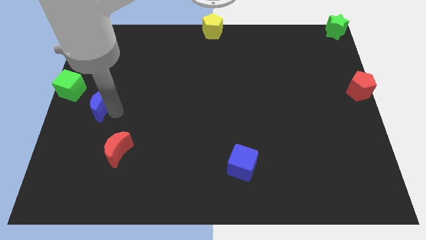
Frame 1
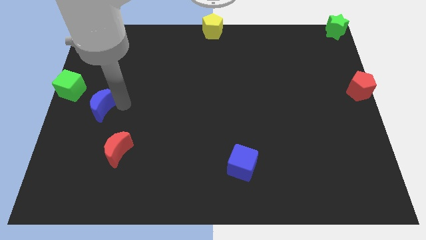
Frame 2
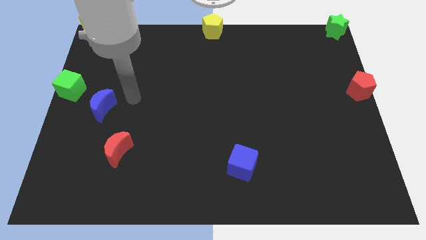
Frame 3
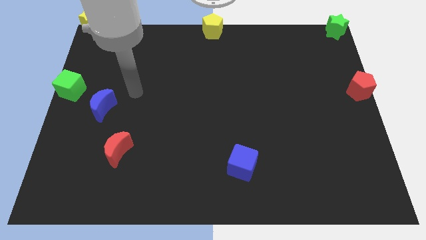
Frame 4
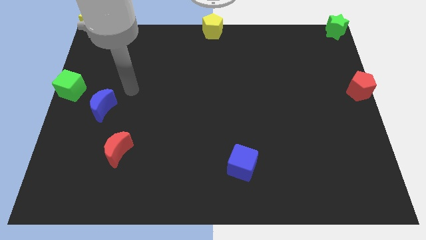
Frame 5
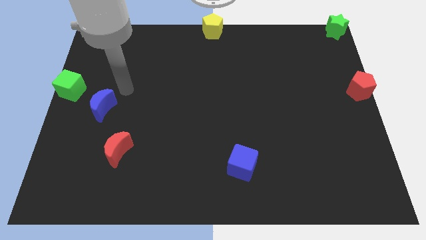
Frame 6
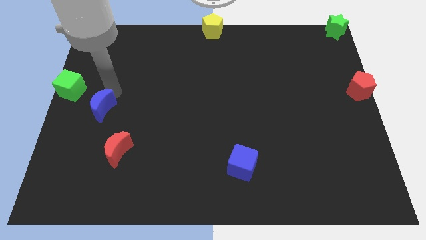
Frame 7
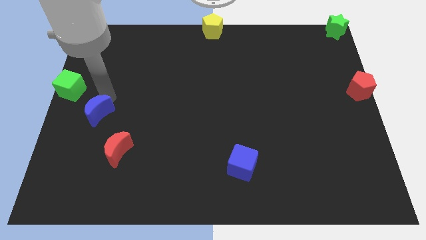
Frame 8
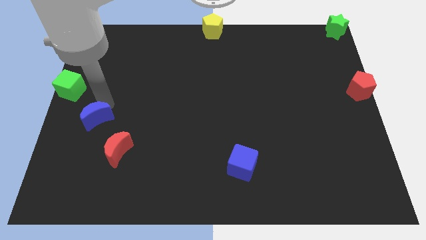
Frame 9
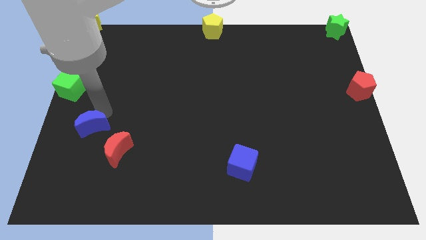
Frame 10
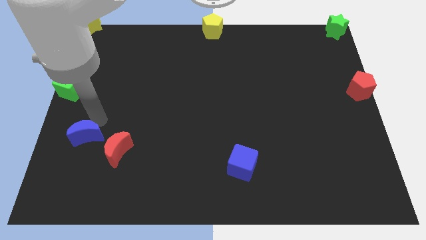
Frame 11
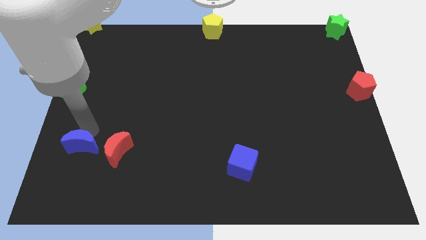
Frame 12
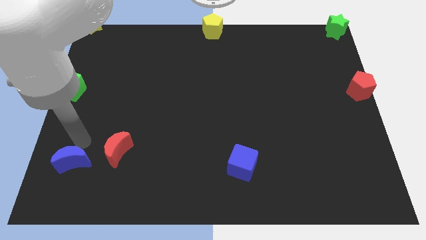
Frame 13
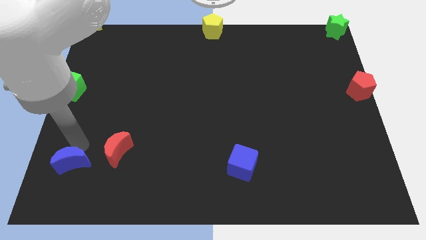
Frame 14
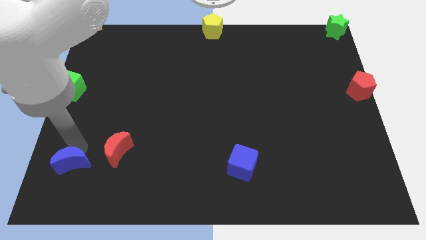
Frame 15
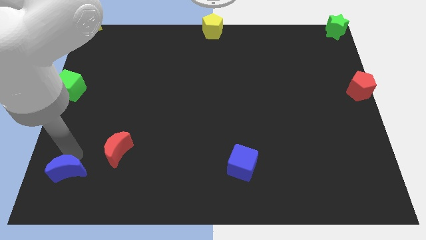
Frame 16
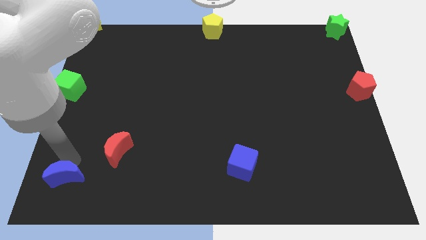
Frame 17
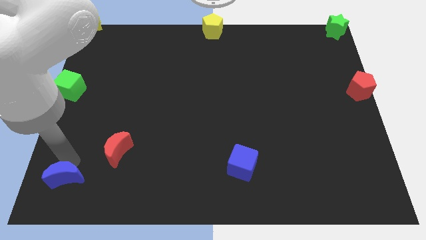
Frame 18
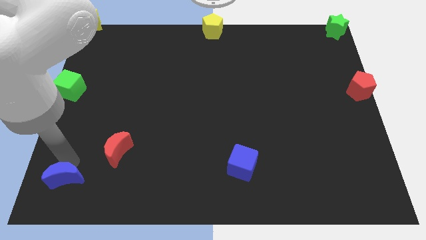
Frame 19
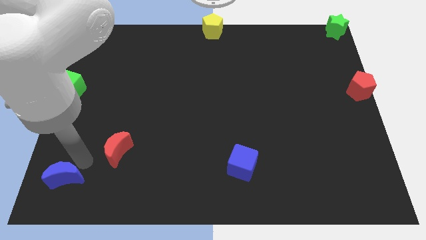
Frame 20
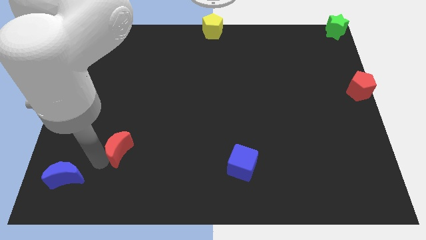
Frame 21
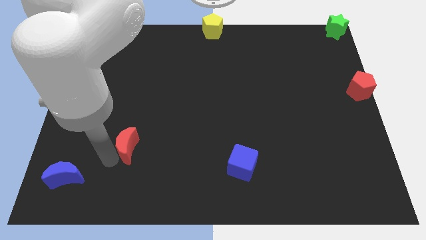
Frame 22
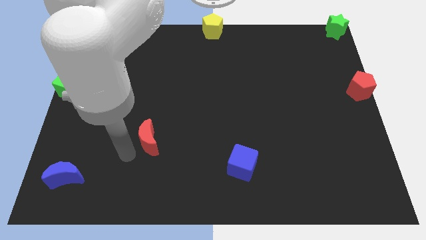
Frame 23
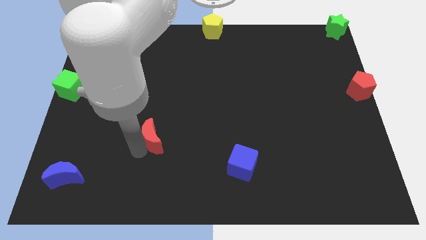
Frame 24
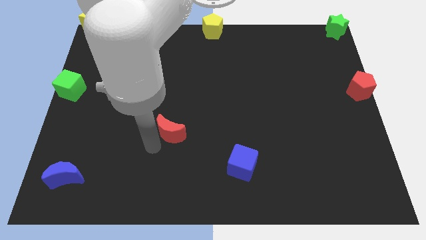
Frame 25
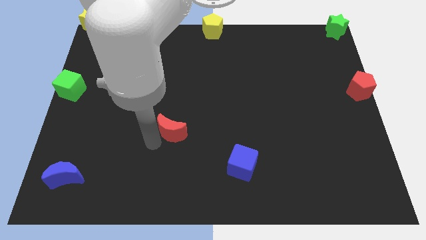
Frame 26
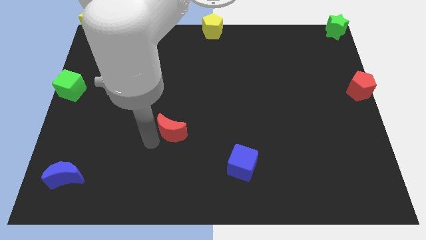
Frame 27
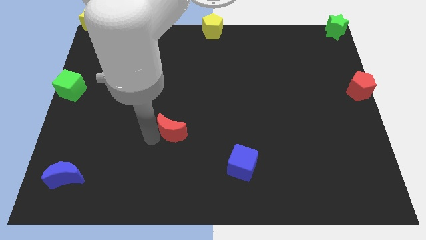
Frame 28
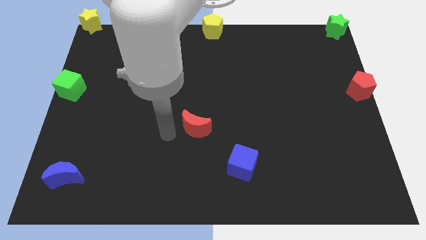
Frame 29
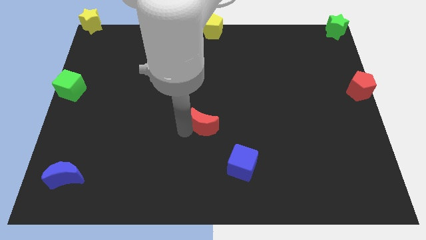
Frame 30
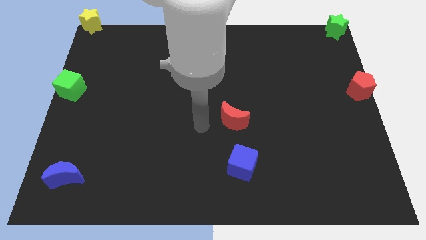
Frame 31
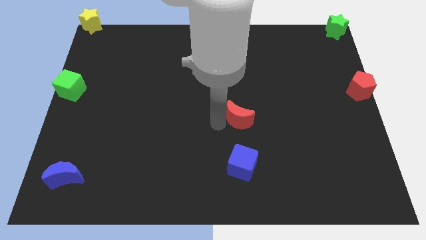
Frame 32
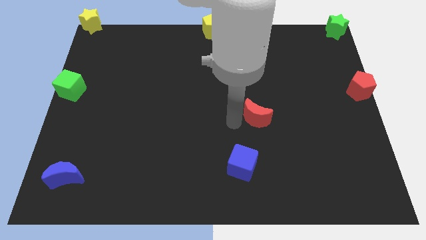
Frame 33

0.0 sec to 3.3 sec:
move the red moon to the middle of the board

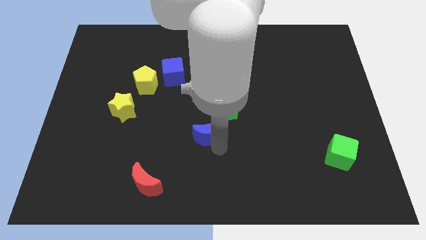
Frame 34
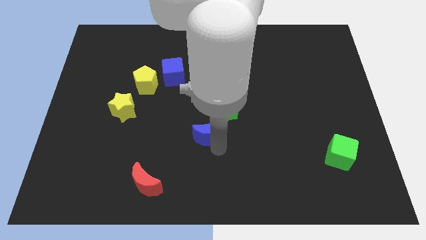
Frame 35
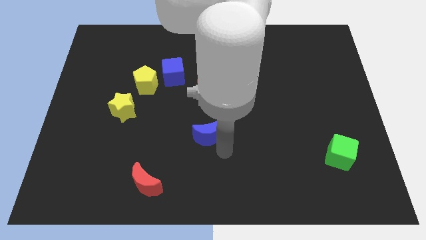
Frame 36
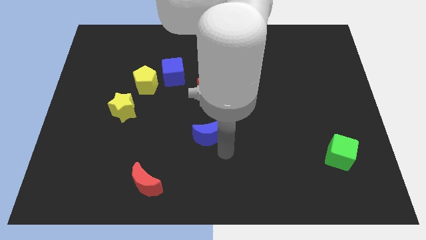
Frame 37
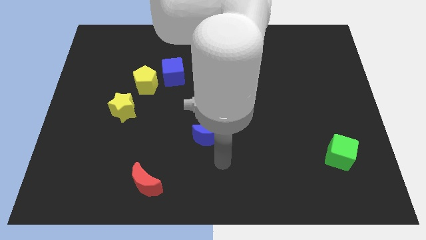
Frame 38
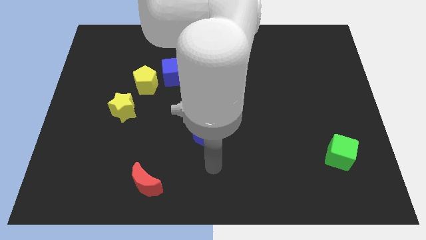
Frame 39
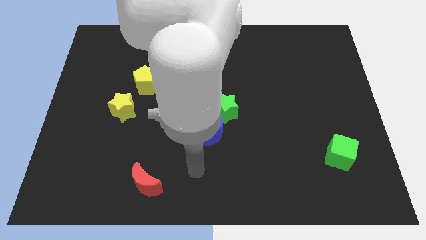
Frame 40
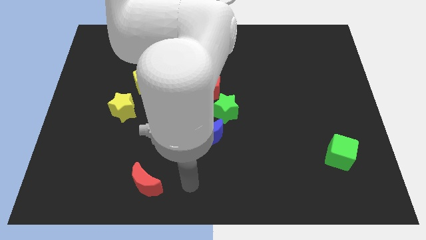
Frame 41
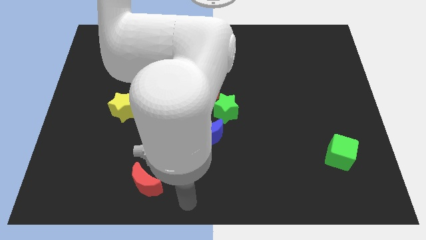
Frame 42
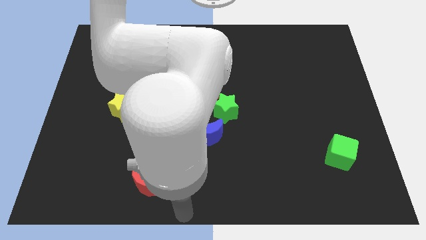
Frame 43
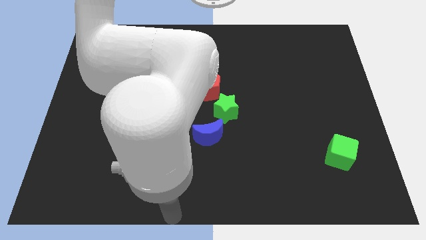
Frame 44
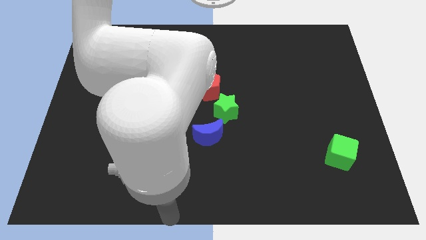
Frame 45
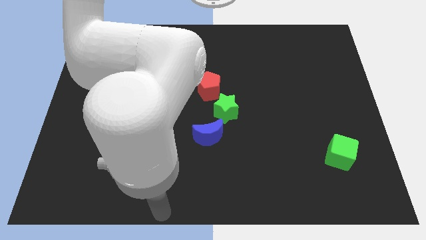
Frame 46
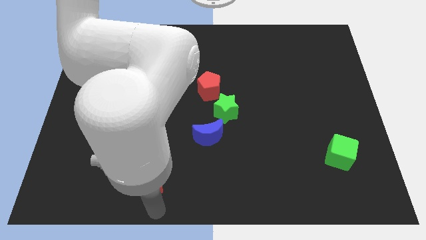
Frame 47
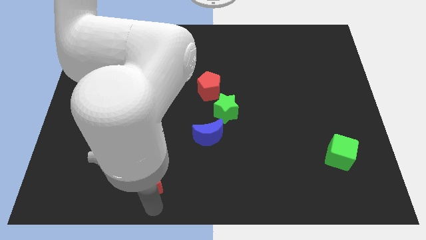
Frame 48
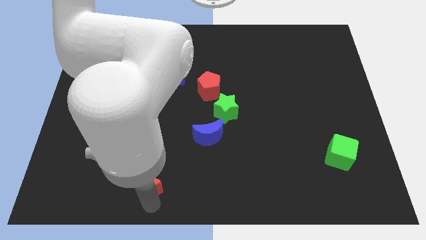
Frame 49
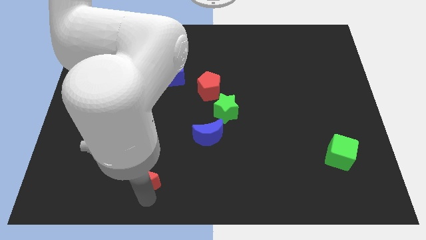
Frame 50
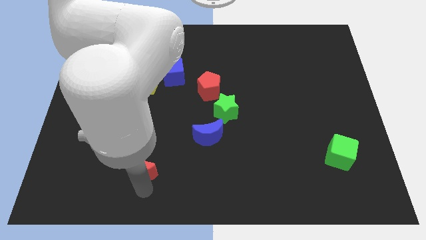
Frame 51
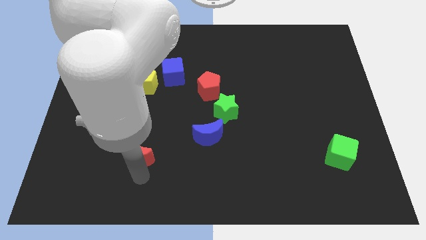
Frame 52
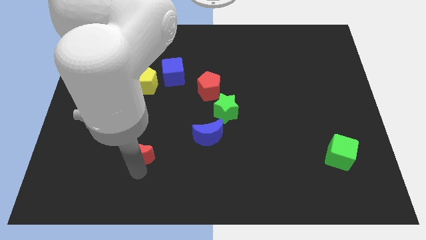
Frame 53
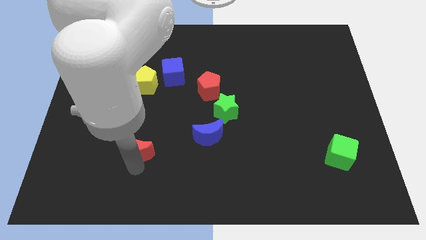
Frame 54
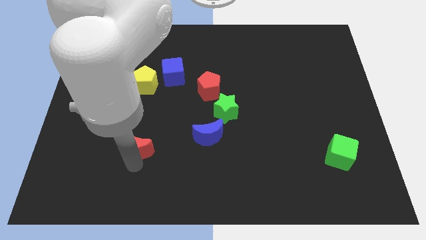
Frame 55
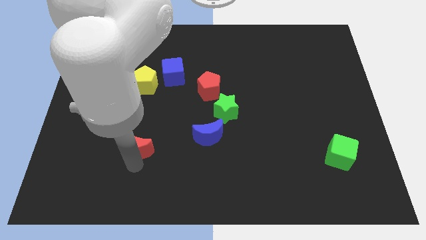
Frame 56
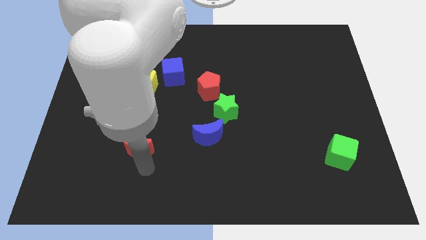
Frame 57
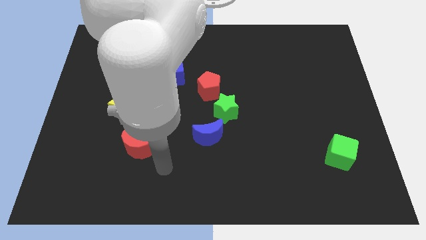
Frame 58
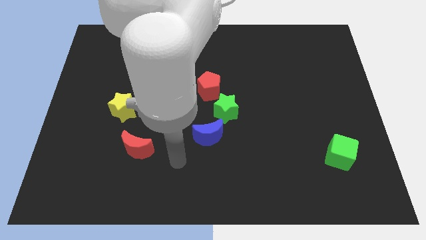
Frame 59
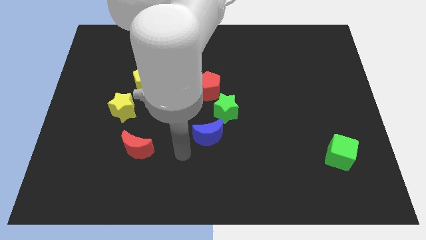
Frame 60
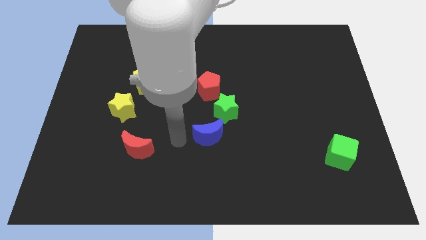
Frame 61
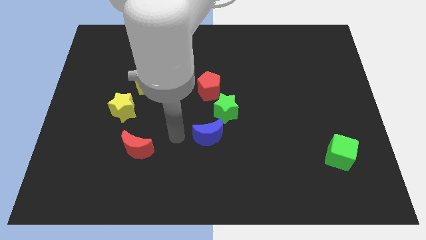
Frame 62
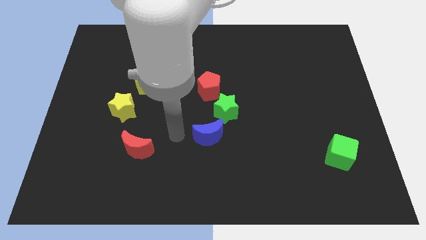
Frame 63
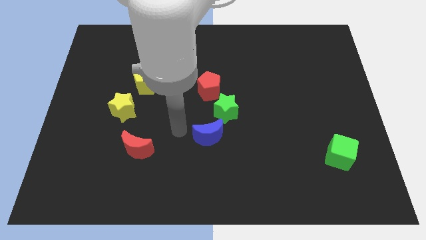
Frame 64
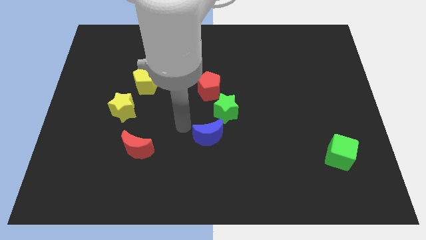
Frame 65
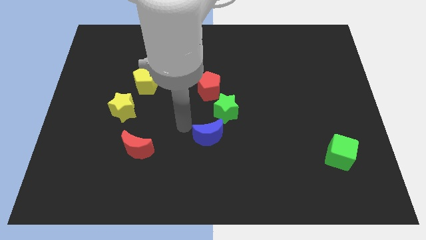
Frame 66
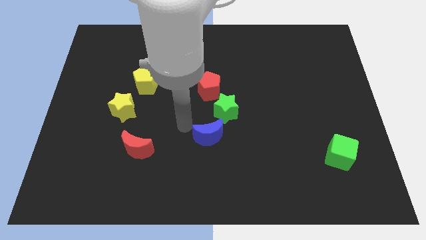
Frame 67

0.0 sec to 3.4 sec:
push the red crescent to the bottom of the yellow star

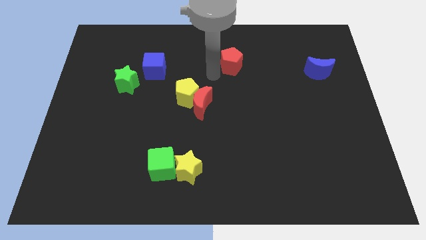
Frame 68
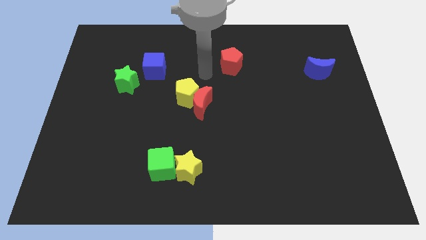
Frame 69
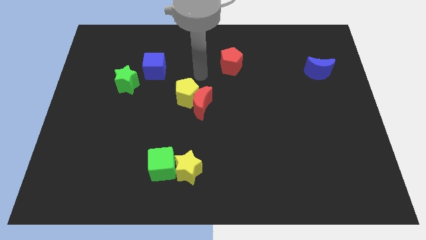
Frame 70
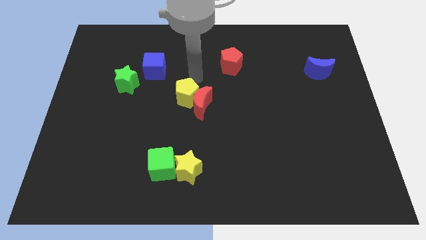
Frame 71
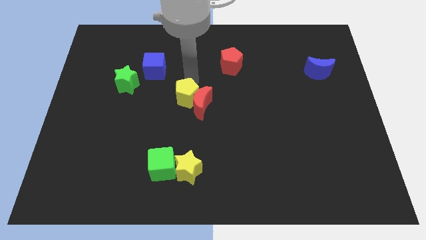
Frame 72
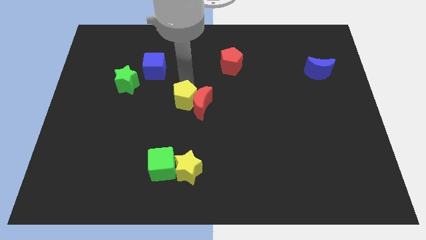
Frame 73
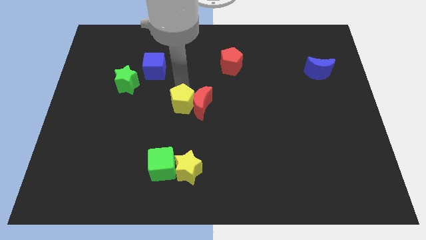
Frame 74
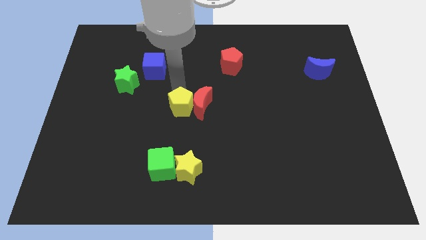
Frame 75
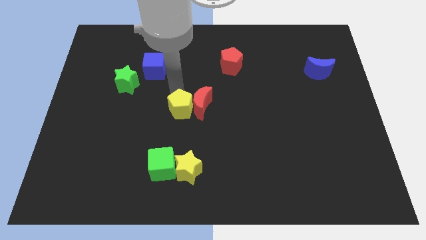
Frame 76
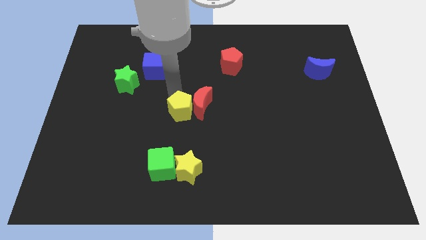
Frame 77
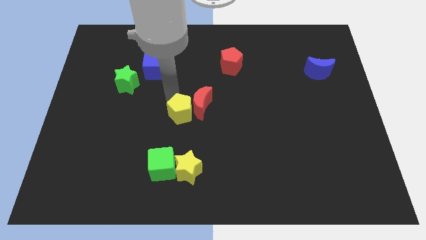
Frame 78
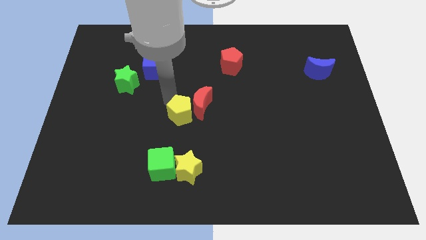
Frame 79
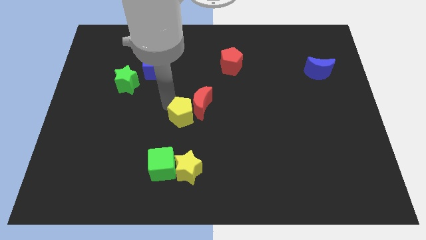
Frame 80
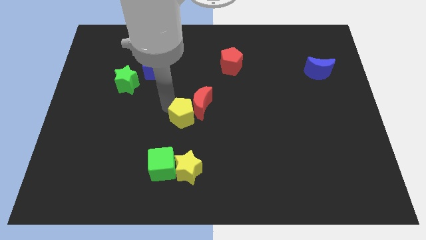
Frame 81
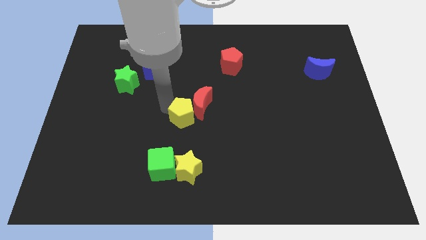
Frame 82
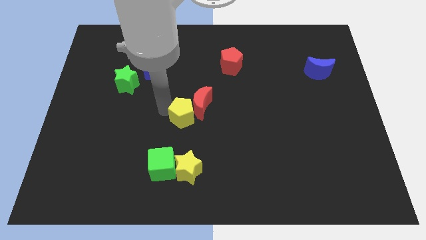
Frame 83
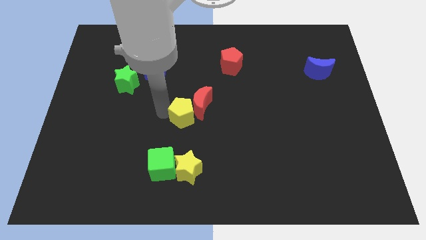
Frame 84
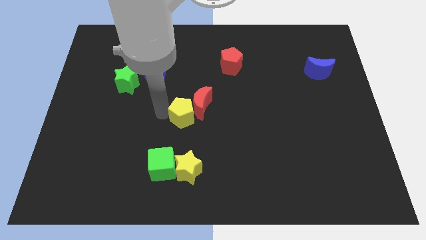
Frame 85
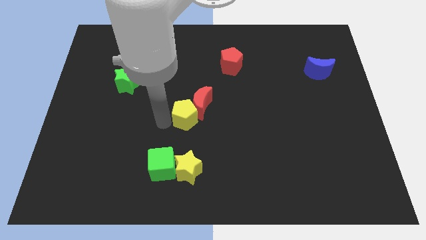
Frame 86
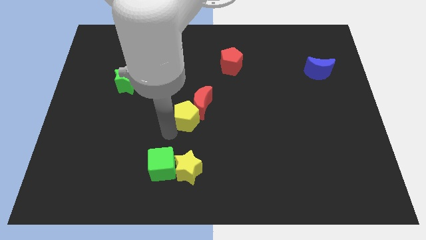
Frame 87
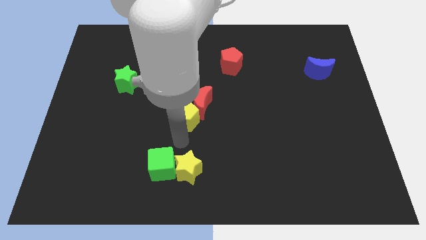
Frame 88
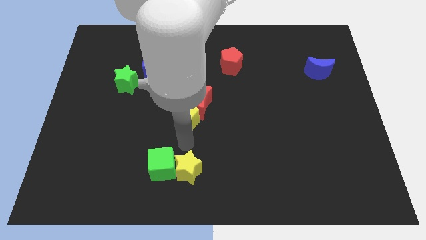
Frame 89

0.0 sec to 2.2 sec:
place the yellow pentagon to the bottom left of the red moon

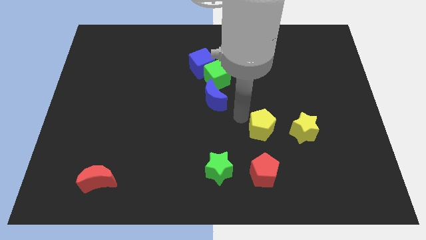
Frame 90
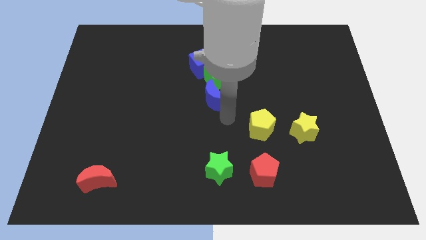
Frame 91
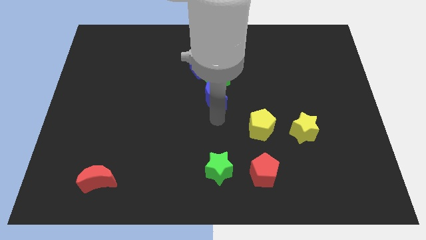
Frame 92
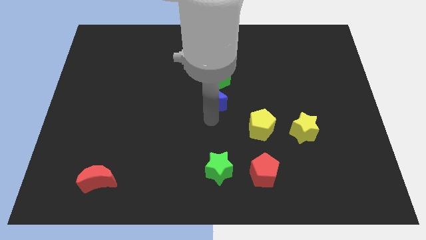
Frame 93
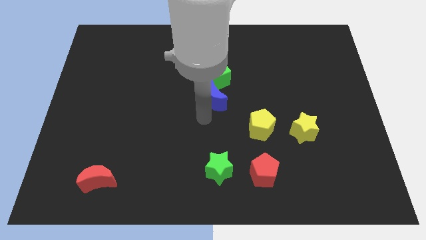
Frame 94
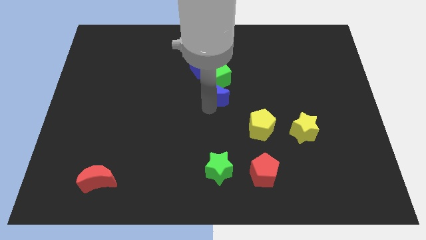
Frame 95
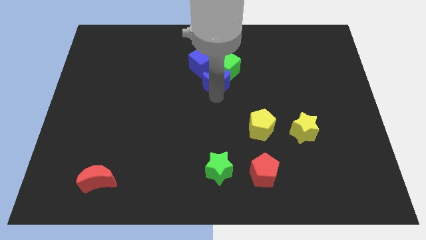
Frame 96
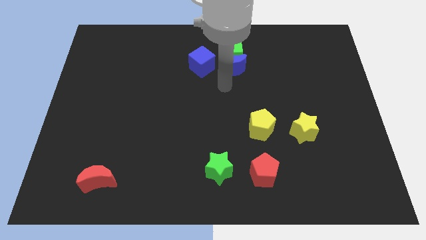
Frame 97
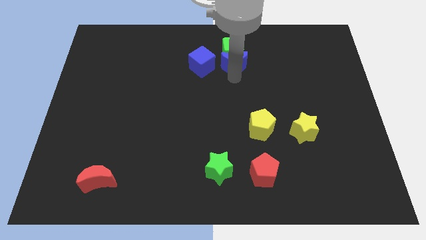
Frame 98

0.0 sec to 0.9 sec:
move your arm below the blue crescent
